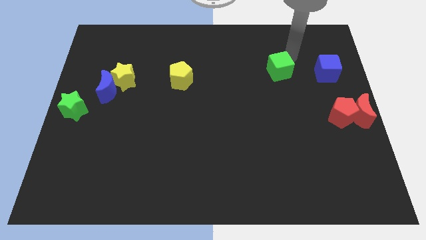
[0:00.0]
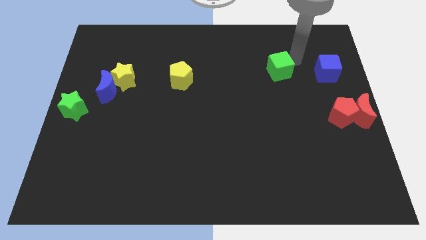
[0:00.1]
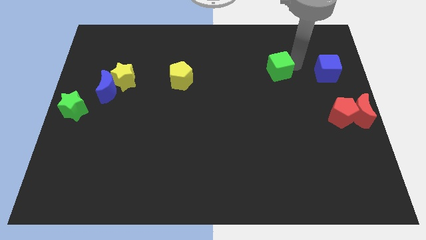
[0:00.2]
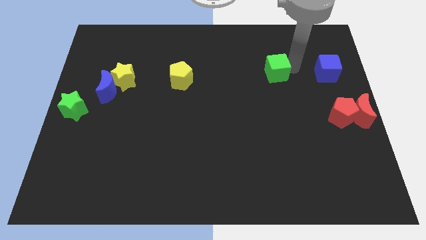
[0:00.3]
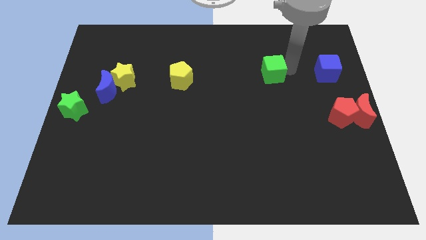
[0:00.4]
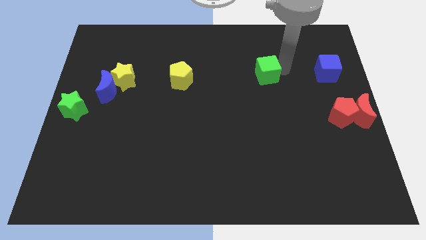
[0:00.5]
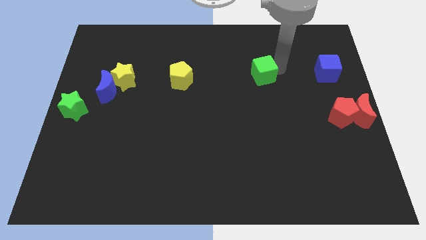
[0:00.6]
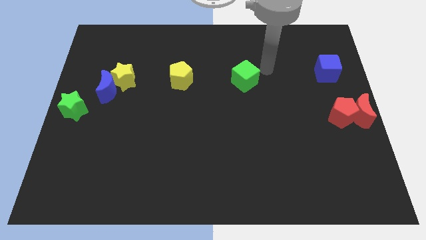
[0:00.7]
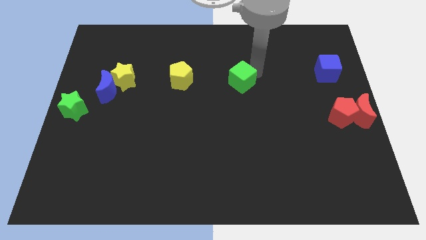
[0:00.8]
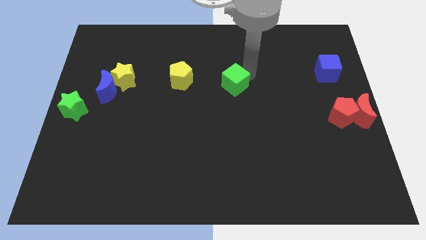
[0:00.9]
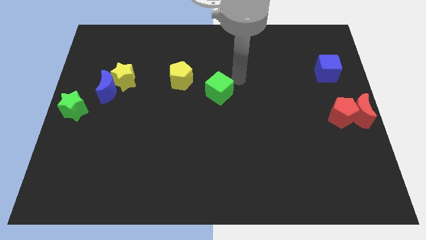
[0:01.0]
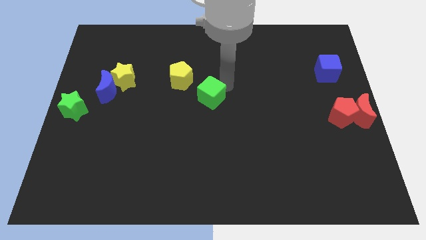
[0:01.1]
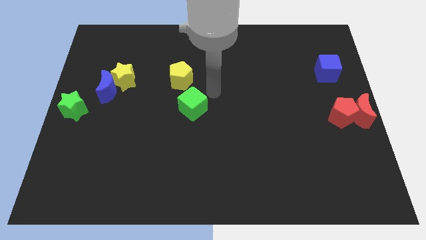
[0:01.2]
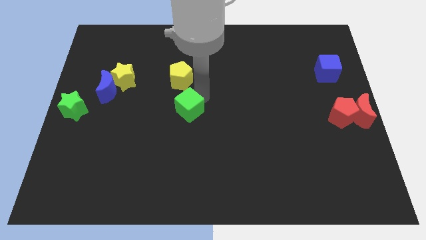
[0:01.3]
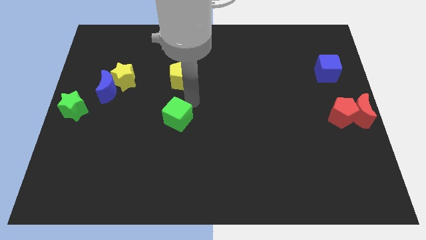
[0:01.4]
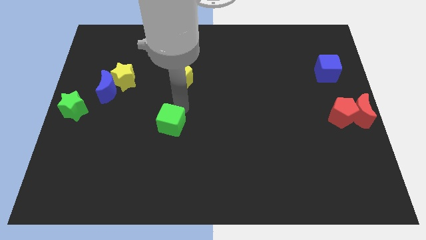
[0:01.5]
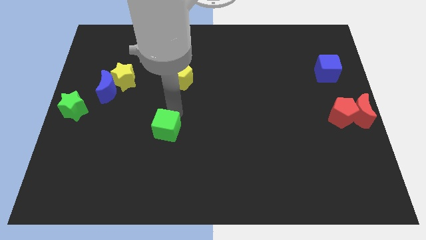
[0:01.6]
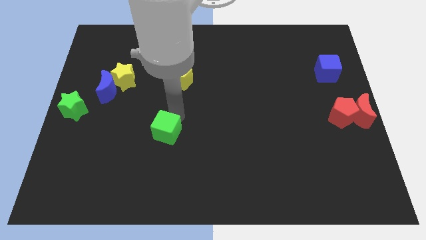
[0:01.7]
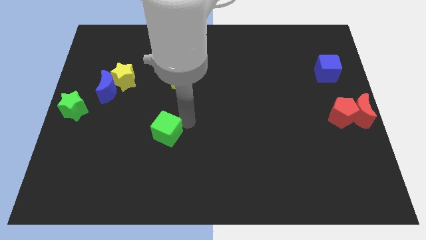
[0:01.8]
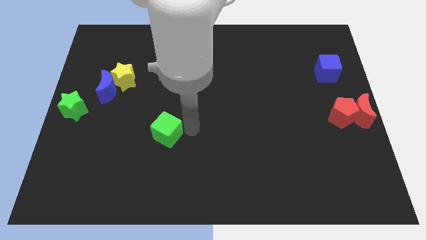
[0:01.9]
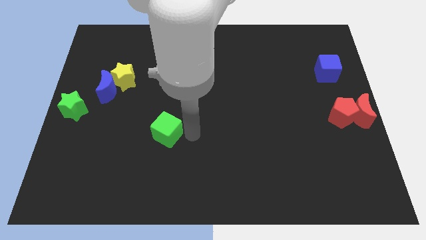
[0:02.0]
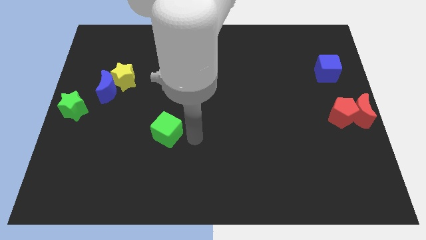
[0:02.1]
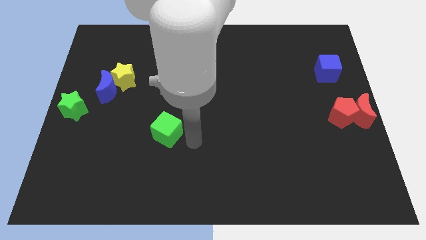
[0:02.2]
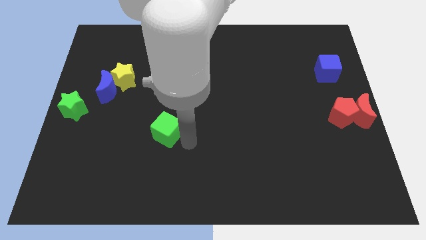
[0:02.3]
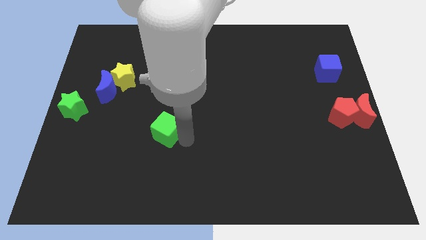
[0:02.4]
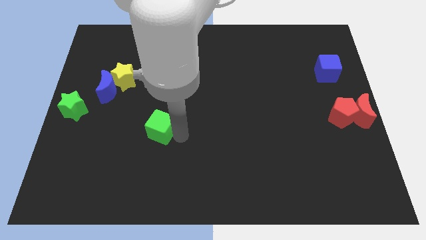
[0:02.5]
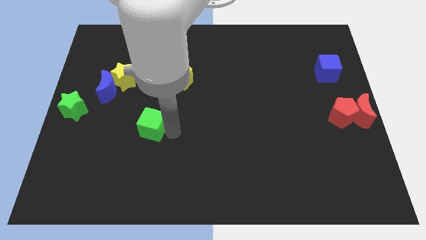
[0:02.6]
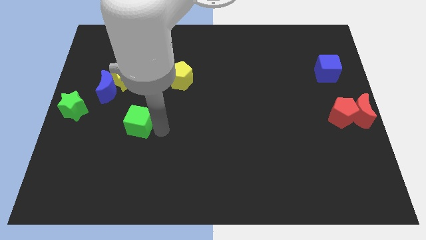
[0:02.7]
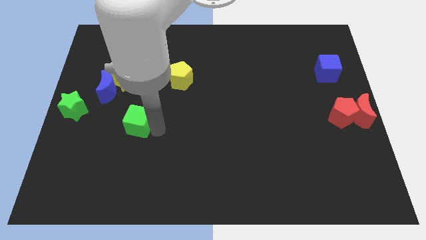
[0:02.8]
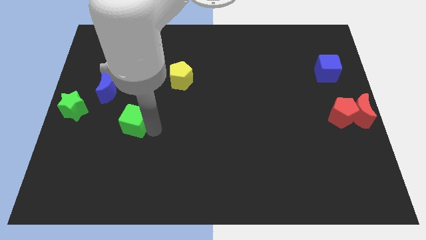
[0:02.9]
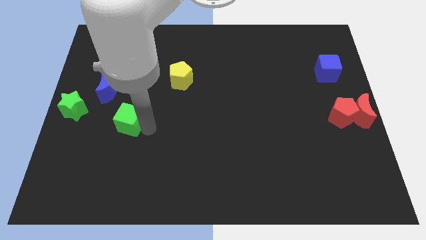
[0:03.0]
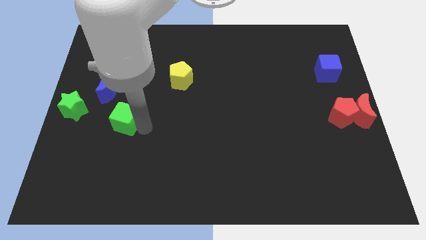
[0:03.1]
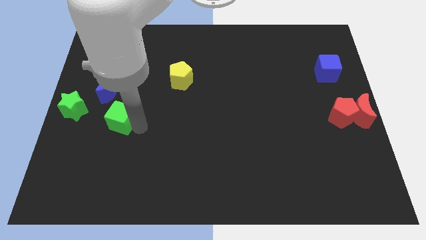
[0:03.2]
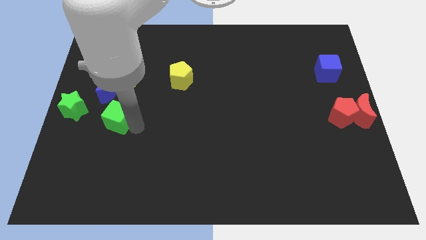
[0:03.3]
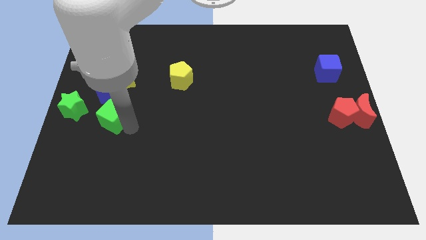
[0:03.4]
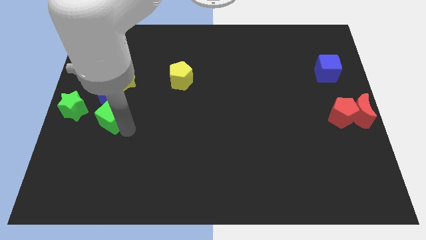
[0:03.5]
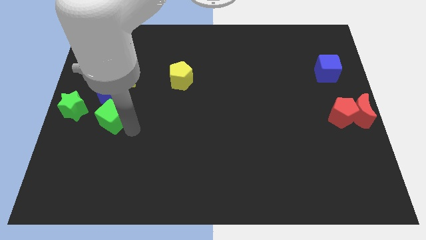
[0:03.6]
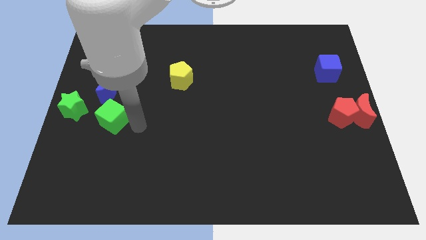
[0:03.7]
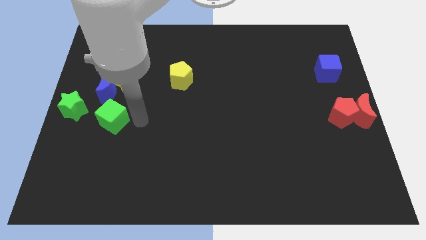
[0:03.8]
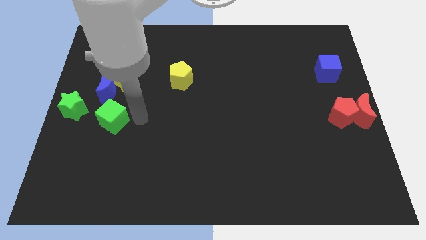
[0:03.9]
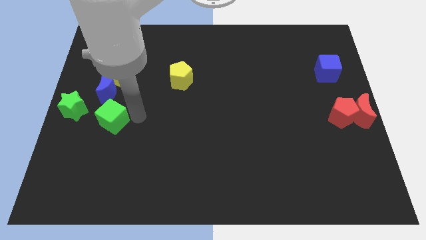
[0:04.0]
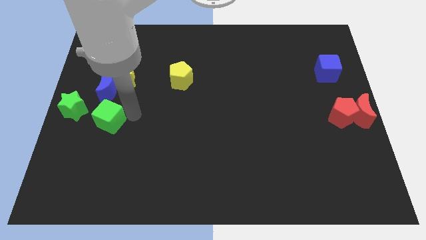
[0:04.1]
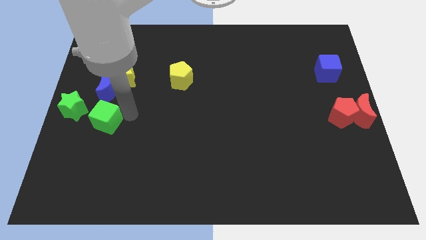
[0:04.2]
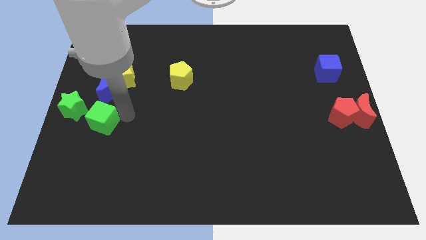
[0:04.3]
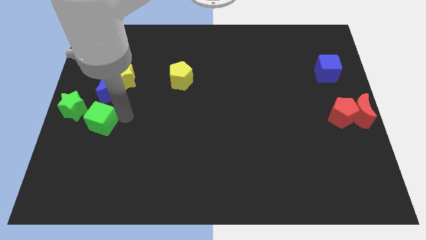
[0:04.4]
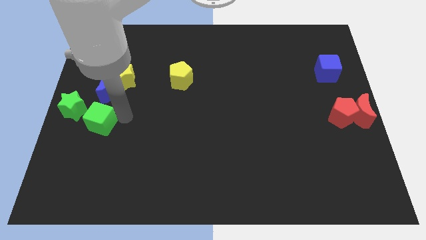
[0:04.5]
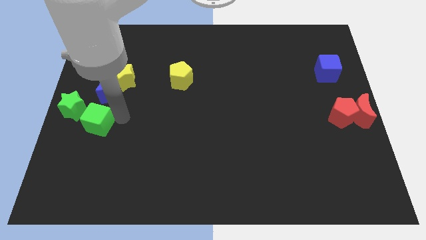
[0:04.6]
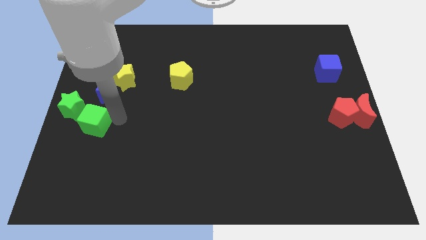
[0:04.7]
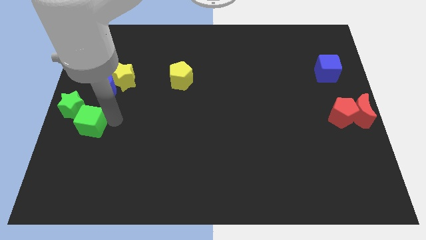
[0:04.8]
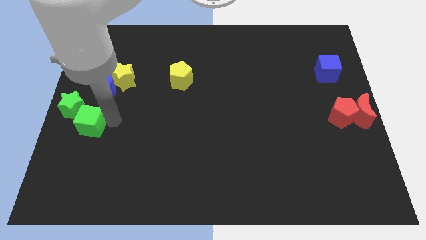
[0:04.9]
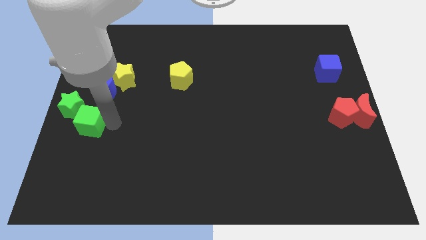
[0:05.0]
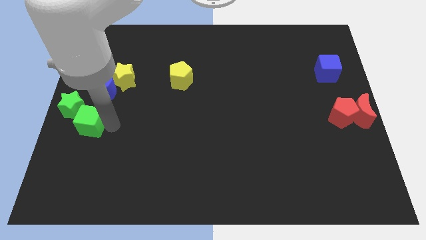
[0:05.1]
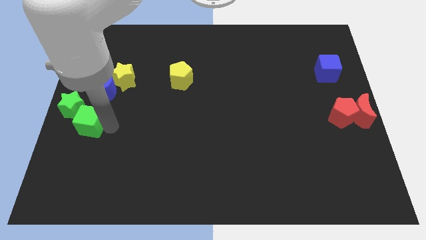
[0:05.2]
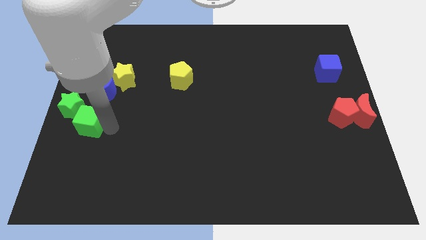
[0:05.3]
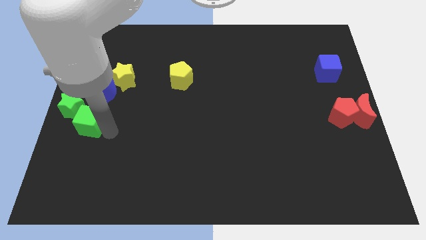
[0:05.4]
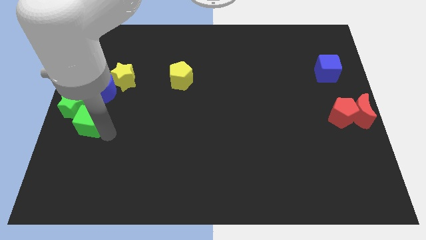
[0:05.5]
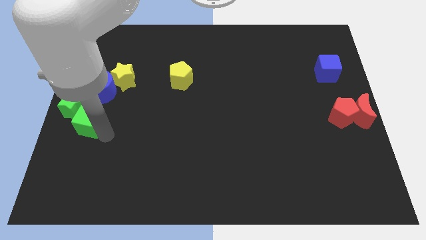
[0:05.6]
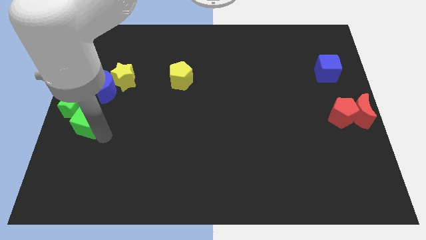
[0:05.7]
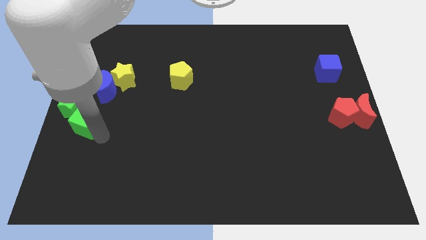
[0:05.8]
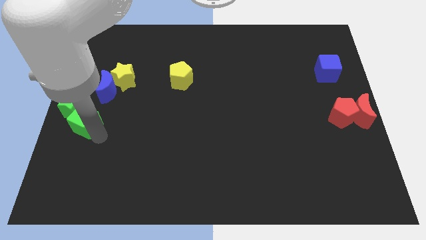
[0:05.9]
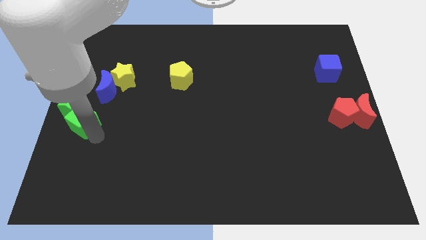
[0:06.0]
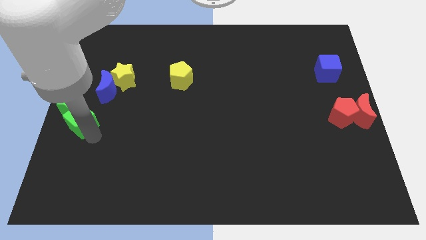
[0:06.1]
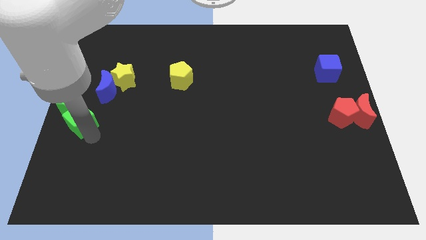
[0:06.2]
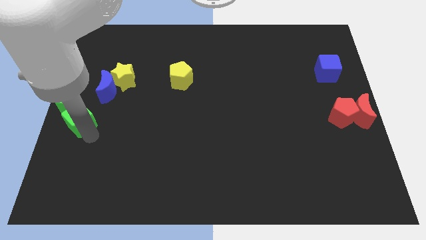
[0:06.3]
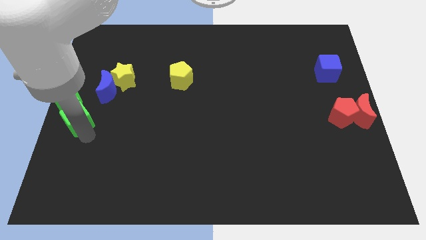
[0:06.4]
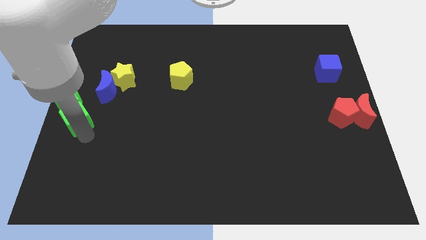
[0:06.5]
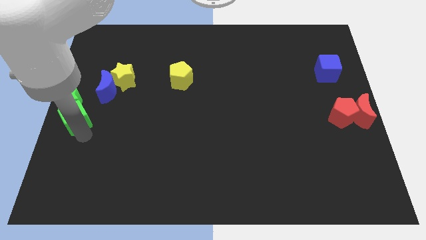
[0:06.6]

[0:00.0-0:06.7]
move green cube into the green star

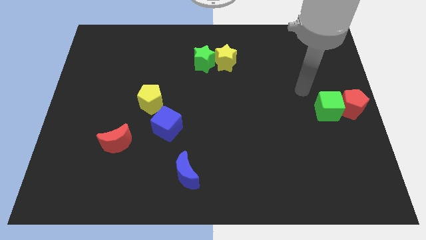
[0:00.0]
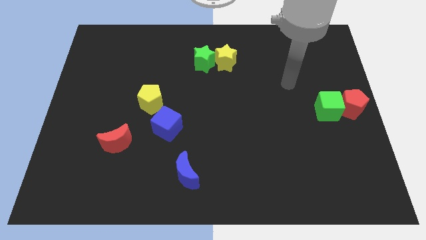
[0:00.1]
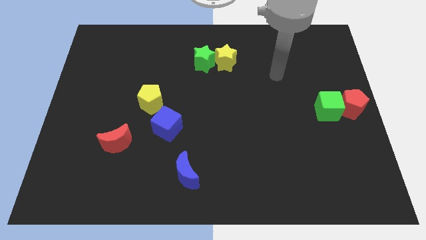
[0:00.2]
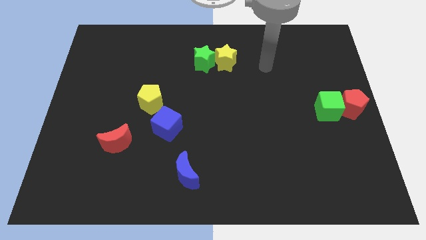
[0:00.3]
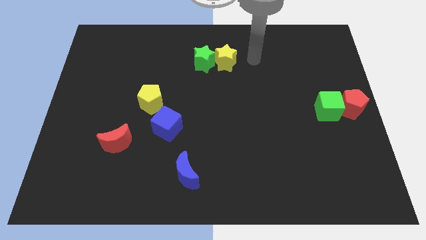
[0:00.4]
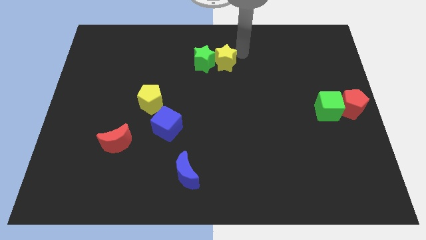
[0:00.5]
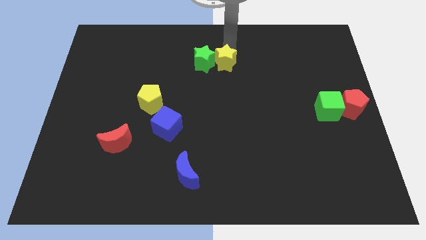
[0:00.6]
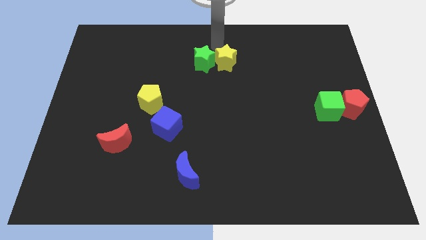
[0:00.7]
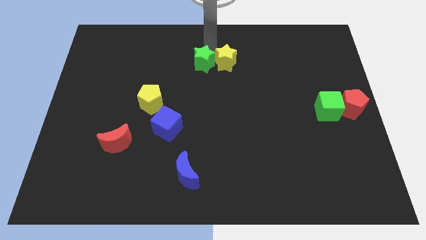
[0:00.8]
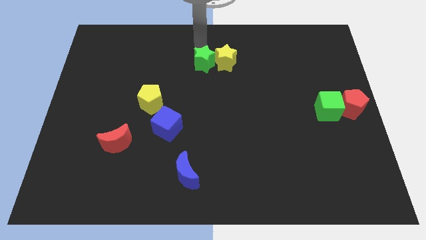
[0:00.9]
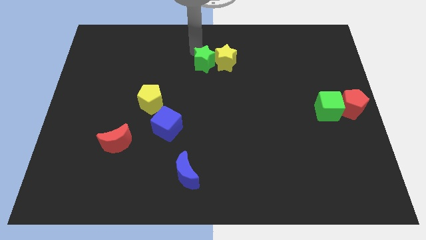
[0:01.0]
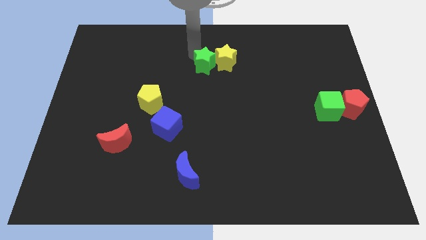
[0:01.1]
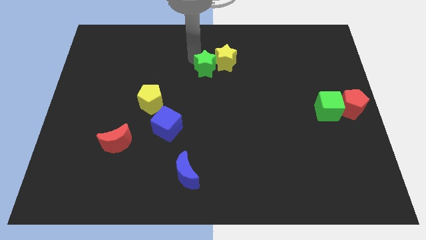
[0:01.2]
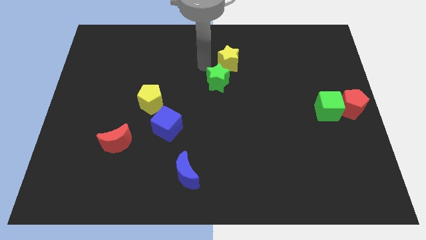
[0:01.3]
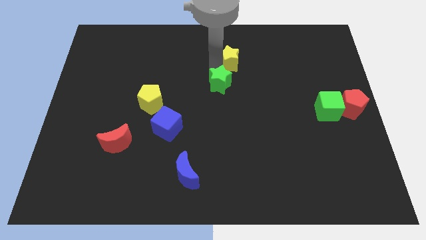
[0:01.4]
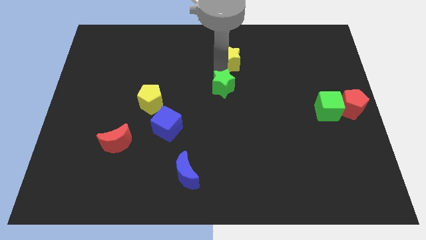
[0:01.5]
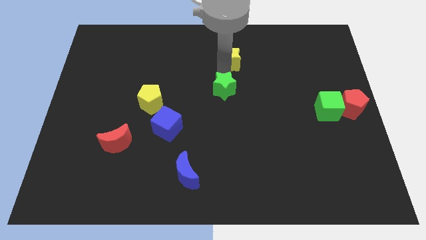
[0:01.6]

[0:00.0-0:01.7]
separate the green star from the yellow star

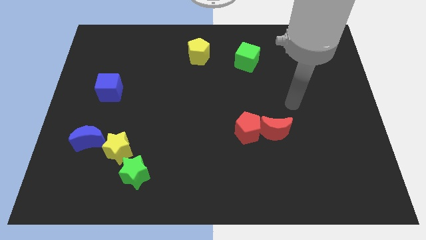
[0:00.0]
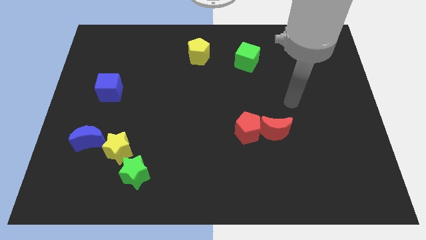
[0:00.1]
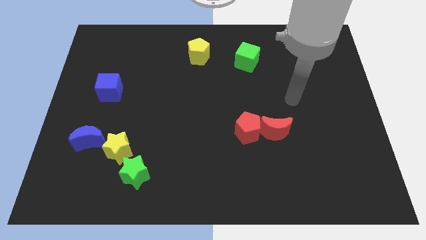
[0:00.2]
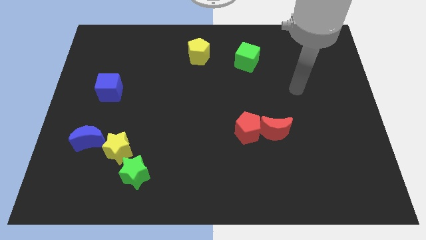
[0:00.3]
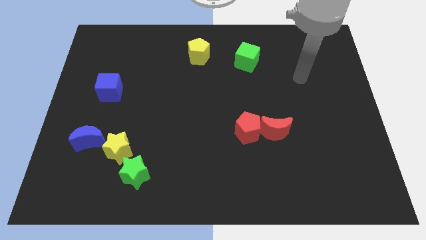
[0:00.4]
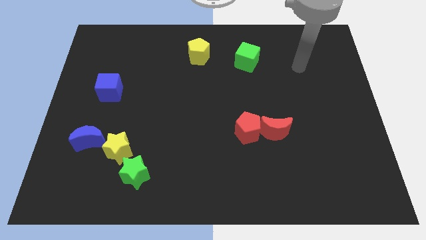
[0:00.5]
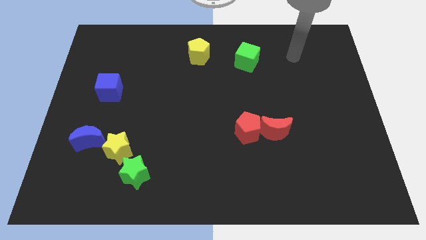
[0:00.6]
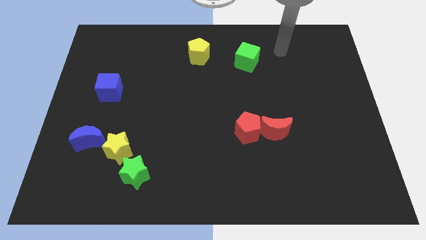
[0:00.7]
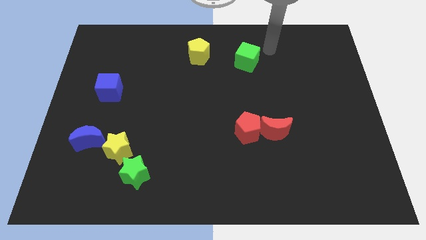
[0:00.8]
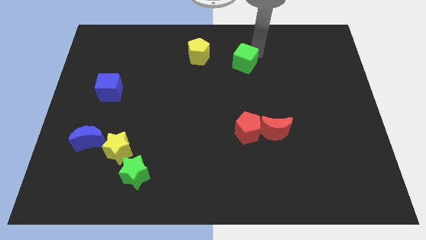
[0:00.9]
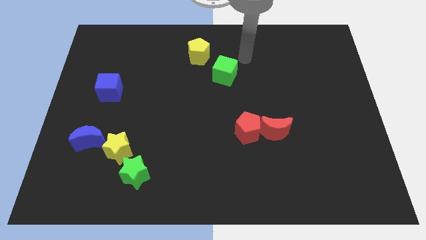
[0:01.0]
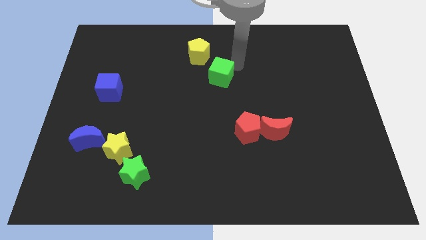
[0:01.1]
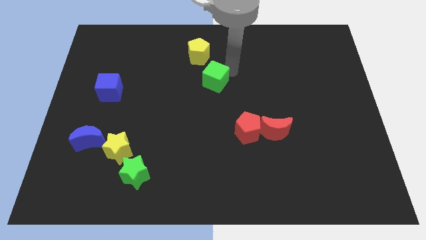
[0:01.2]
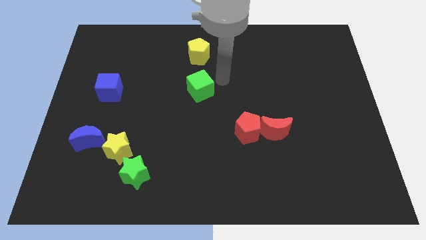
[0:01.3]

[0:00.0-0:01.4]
push the green cube to the bottom of the yellow pentagon
